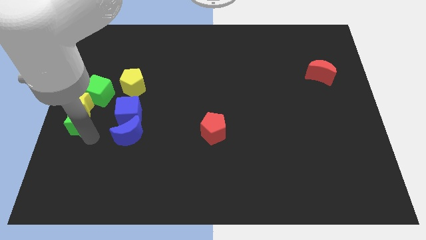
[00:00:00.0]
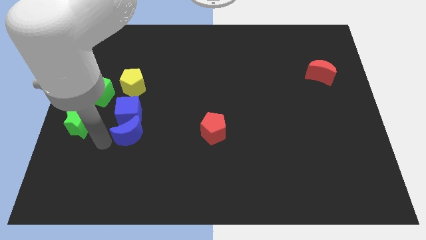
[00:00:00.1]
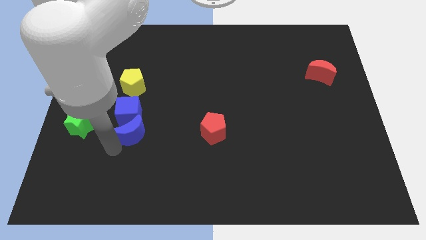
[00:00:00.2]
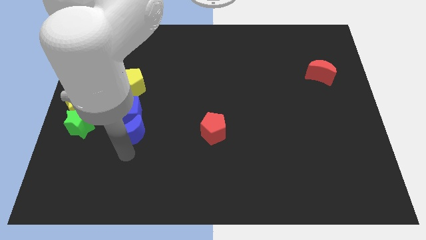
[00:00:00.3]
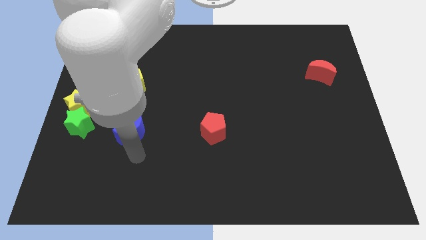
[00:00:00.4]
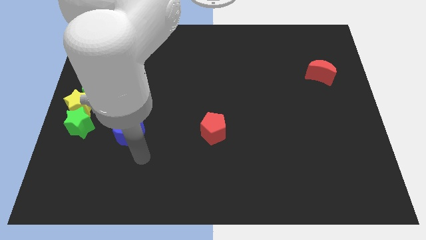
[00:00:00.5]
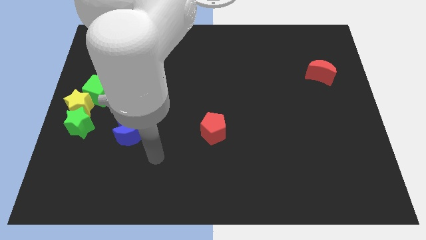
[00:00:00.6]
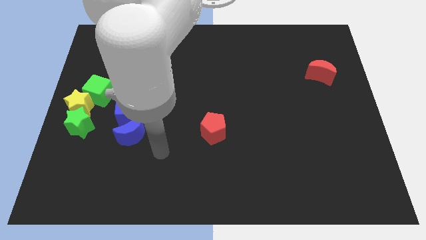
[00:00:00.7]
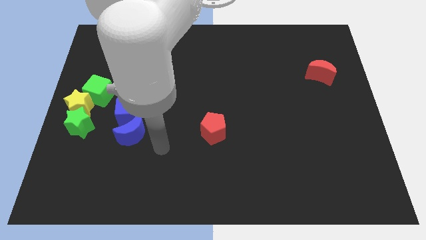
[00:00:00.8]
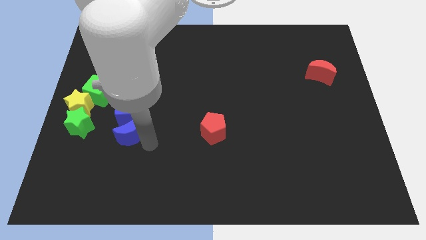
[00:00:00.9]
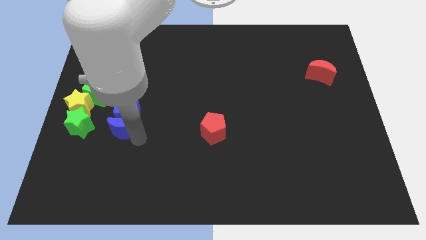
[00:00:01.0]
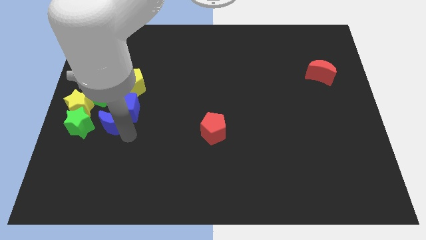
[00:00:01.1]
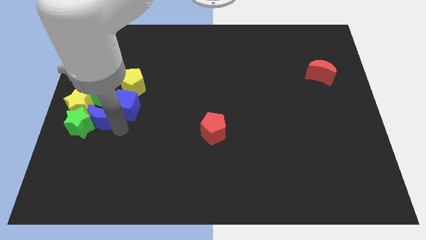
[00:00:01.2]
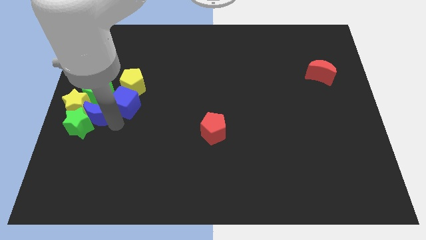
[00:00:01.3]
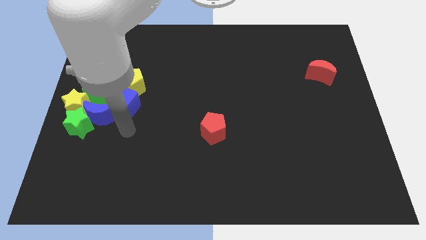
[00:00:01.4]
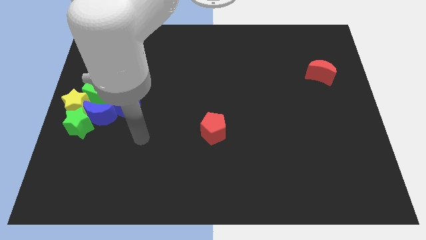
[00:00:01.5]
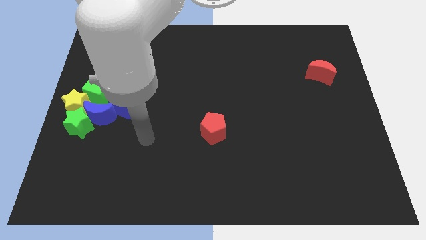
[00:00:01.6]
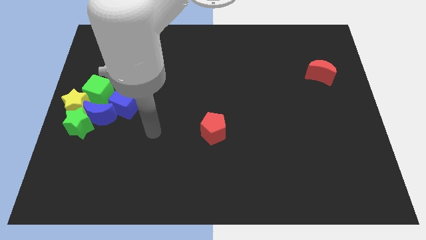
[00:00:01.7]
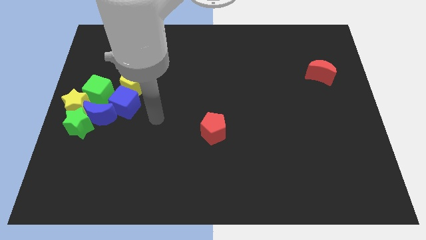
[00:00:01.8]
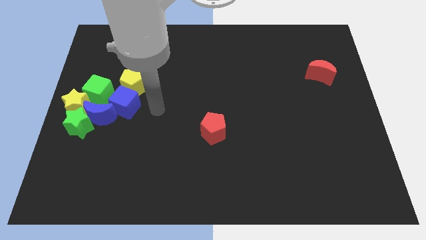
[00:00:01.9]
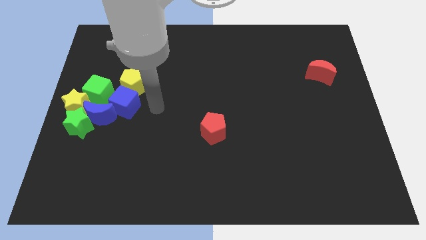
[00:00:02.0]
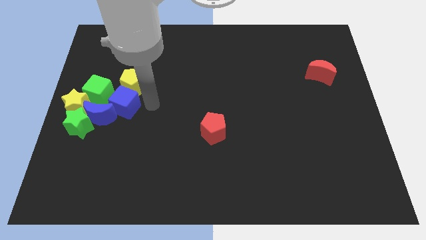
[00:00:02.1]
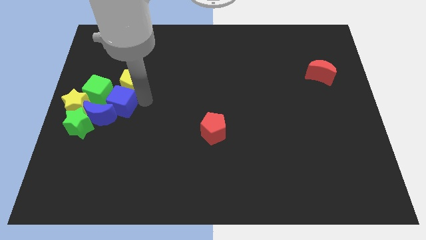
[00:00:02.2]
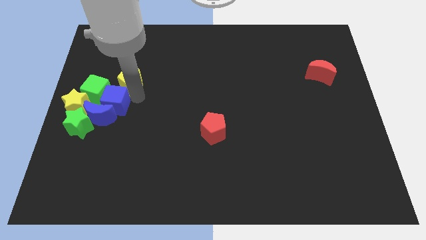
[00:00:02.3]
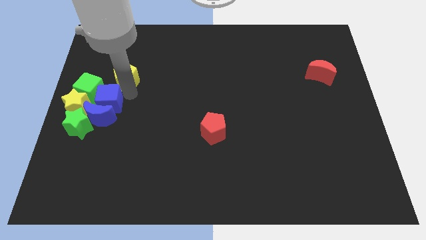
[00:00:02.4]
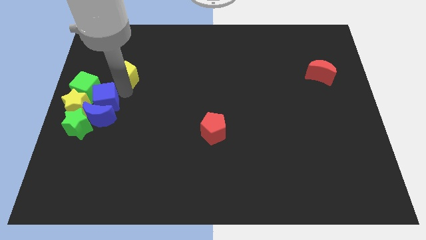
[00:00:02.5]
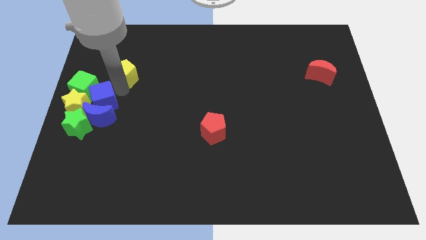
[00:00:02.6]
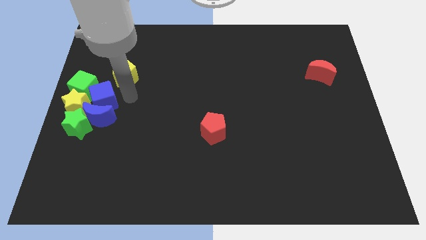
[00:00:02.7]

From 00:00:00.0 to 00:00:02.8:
move the blue blocks to the right of the yellow star

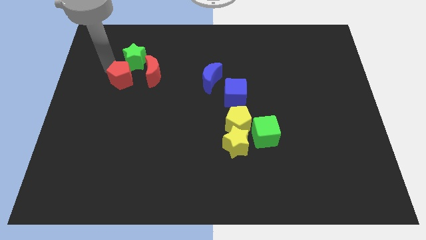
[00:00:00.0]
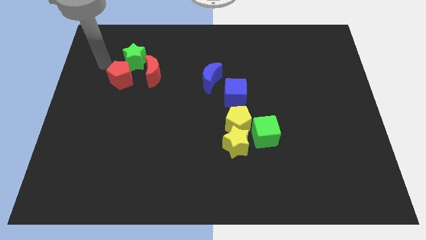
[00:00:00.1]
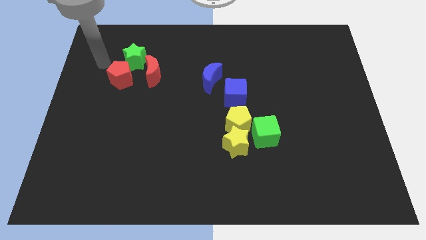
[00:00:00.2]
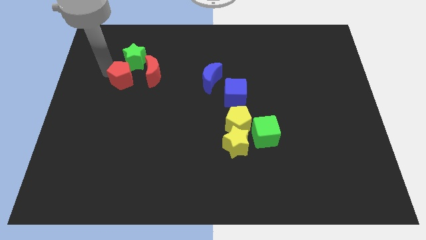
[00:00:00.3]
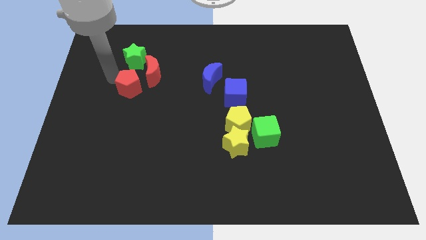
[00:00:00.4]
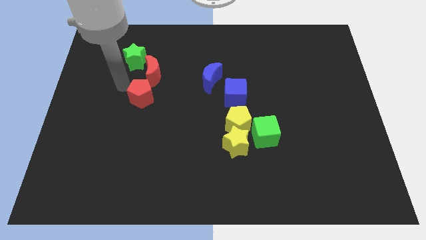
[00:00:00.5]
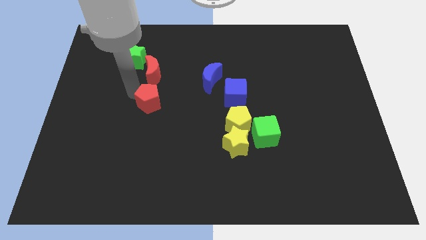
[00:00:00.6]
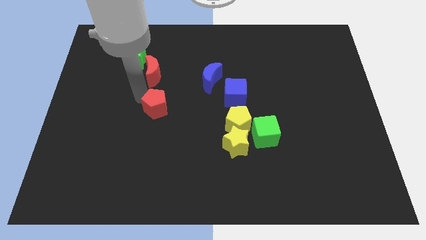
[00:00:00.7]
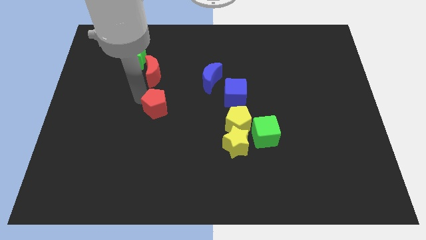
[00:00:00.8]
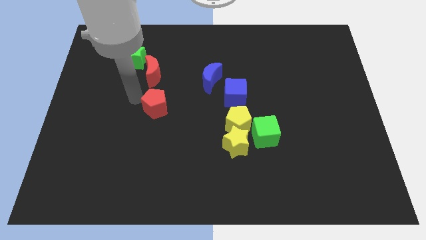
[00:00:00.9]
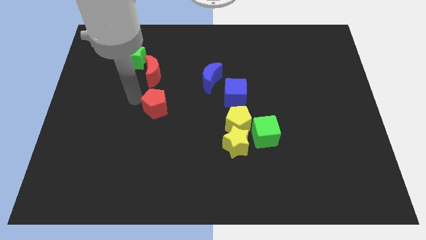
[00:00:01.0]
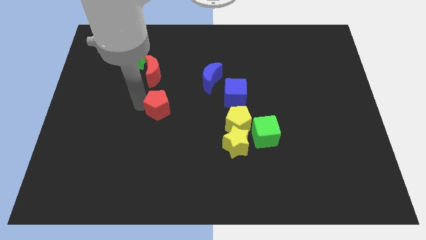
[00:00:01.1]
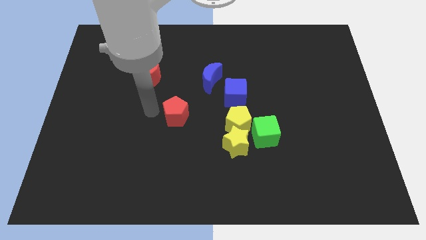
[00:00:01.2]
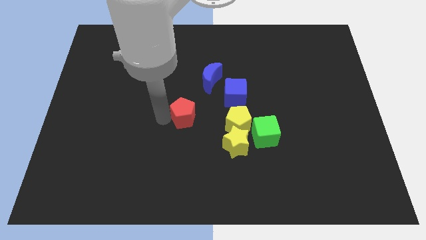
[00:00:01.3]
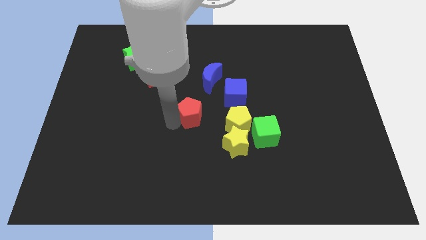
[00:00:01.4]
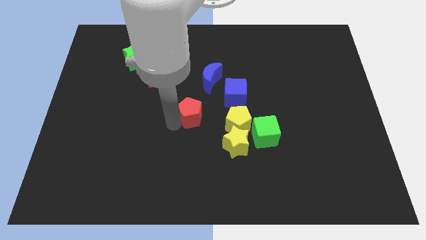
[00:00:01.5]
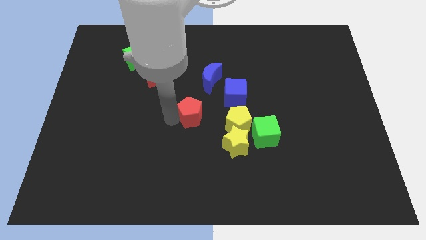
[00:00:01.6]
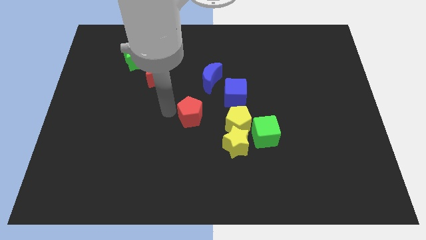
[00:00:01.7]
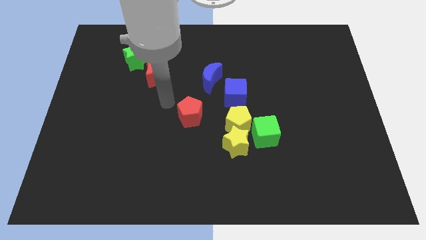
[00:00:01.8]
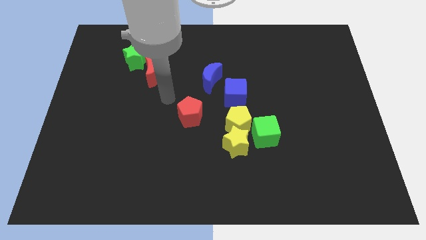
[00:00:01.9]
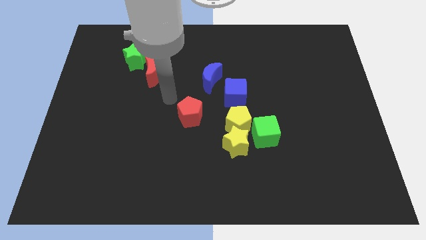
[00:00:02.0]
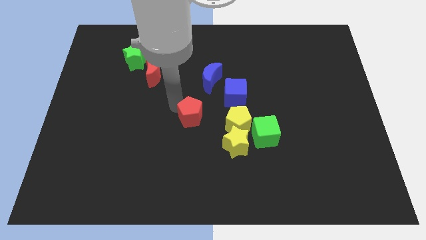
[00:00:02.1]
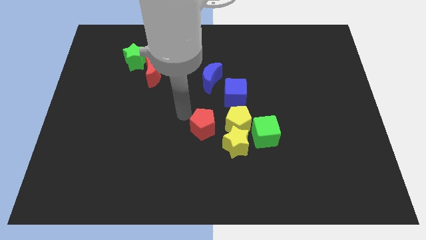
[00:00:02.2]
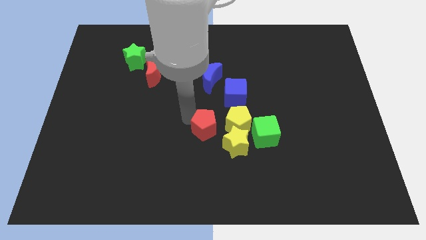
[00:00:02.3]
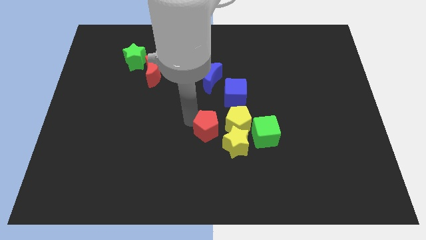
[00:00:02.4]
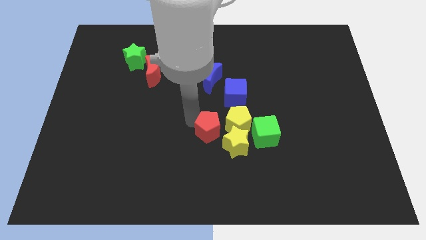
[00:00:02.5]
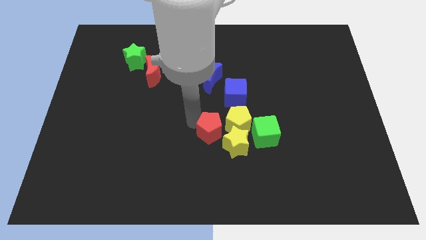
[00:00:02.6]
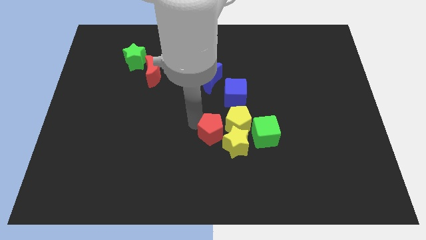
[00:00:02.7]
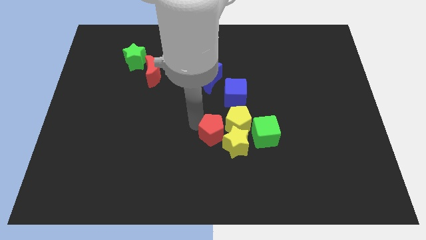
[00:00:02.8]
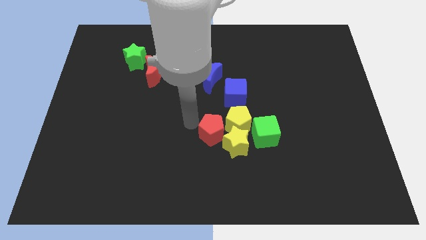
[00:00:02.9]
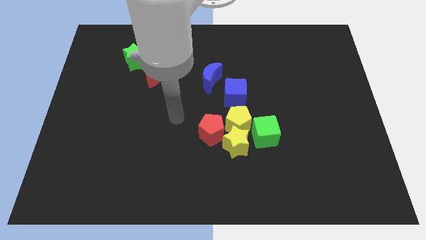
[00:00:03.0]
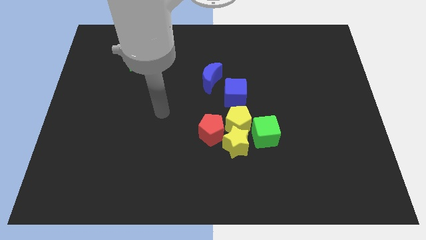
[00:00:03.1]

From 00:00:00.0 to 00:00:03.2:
place the red pentagon at the bottom left side of the yellow pentagon

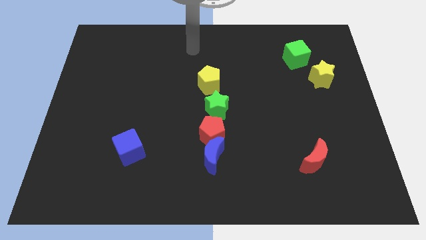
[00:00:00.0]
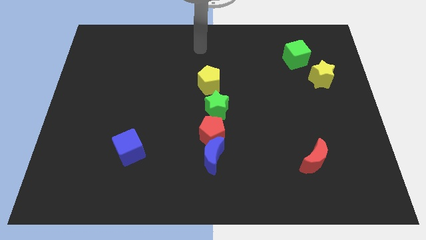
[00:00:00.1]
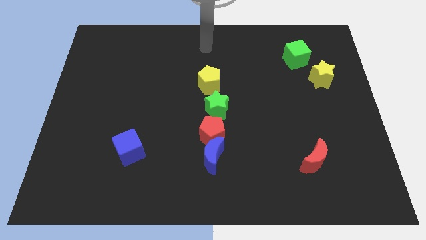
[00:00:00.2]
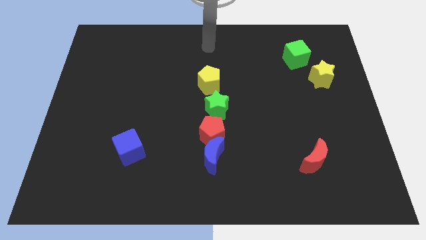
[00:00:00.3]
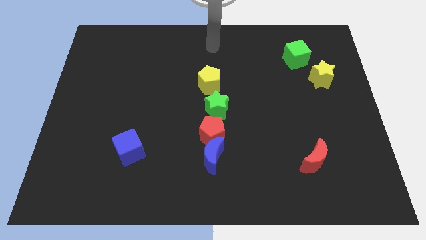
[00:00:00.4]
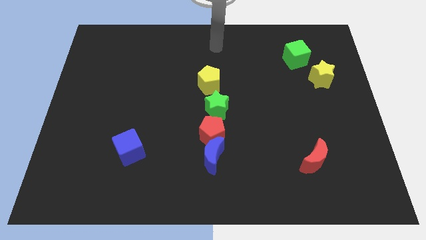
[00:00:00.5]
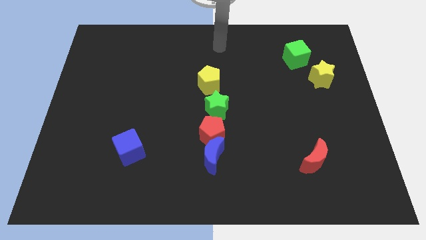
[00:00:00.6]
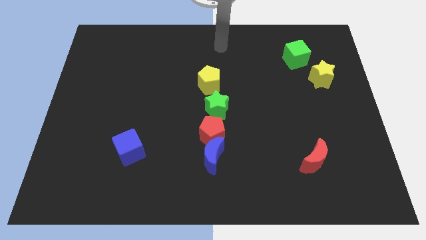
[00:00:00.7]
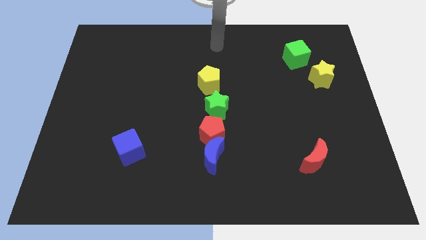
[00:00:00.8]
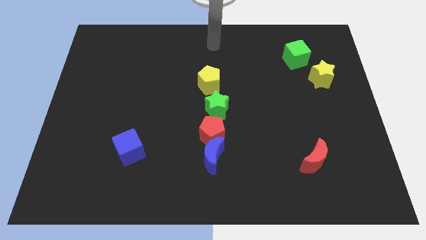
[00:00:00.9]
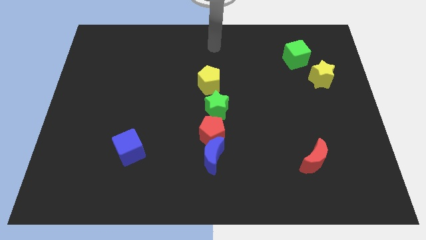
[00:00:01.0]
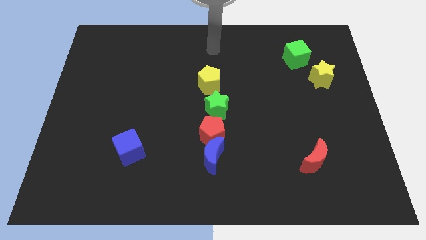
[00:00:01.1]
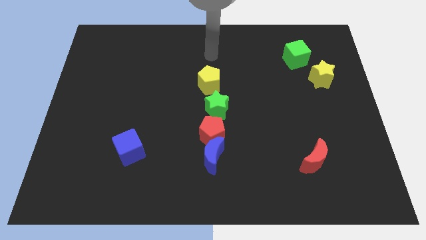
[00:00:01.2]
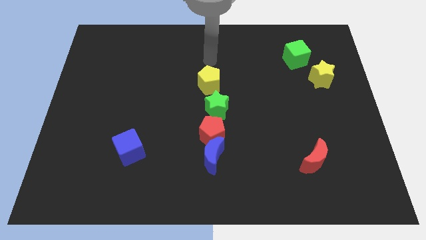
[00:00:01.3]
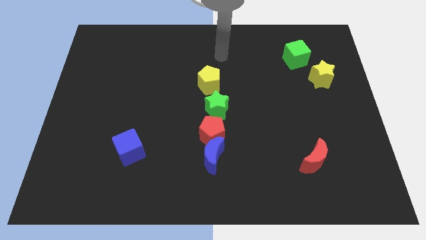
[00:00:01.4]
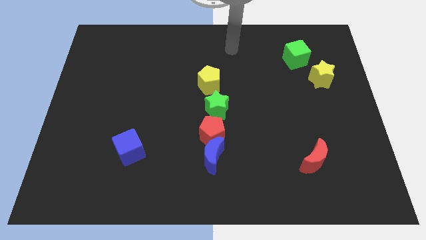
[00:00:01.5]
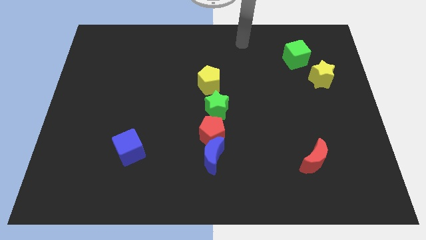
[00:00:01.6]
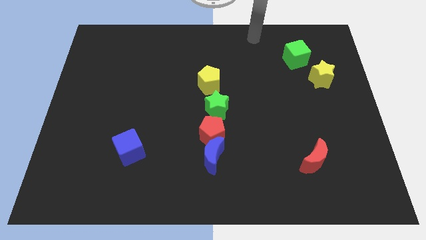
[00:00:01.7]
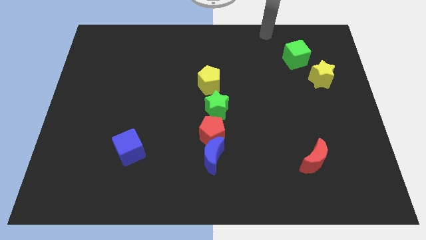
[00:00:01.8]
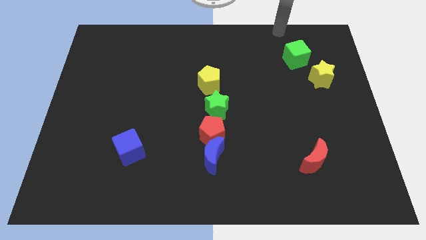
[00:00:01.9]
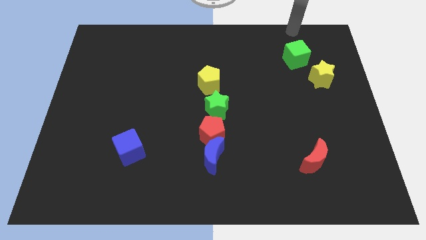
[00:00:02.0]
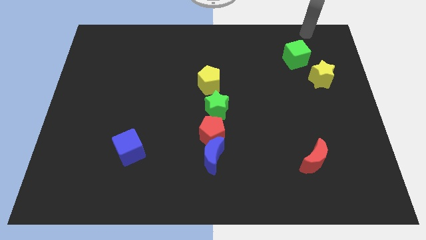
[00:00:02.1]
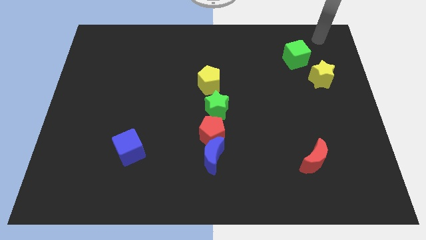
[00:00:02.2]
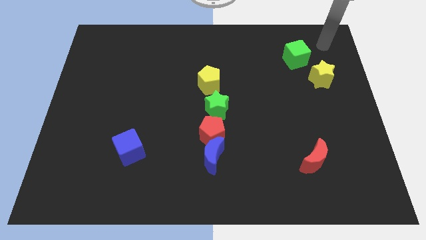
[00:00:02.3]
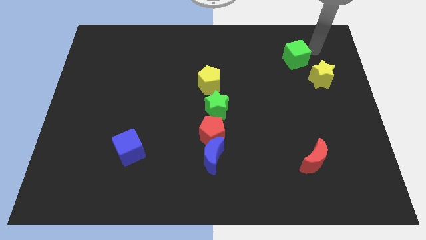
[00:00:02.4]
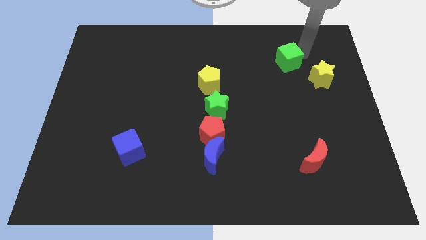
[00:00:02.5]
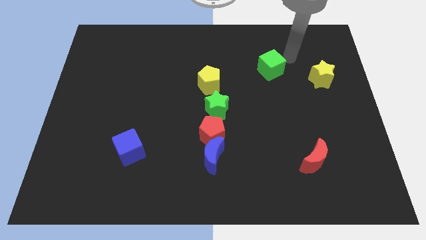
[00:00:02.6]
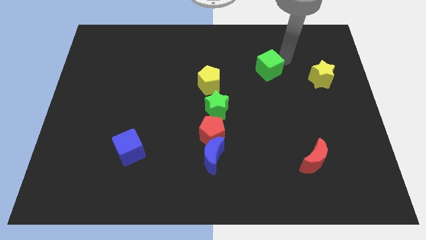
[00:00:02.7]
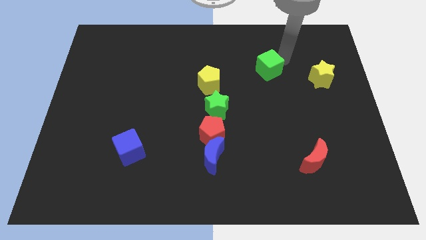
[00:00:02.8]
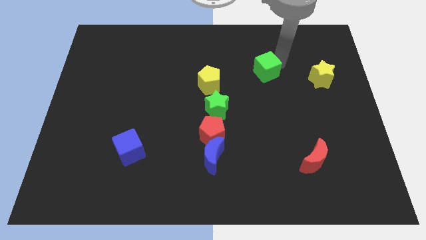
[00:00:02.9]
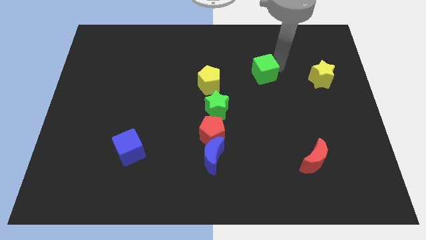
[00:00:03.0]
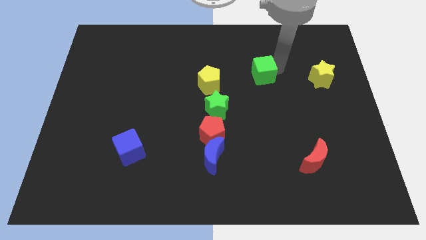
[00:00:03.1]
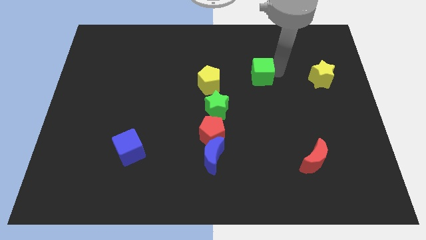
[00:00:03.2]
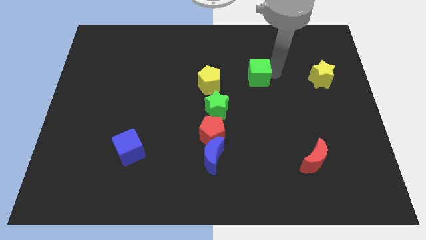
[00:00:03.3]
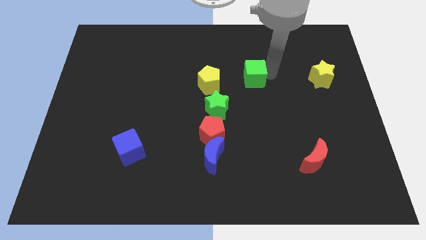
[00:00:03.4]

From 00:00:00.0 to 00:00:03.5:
move green cube in between yellow blocks
